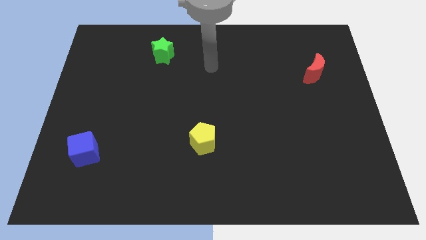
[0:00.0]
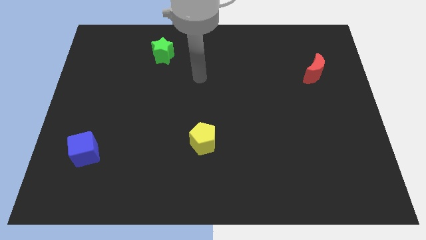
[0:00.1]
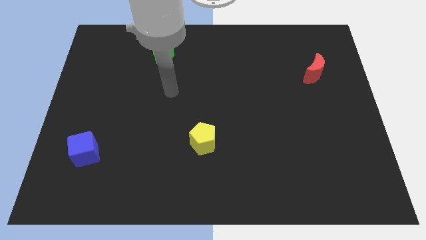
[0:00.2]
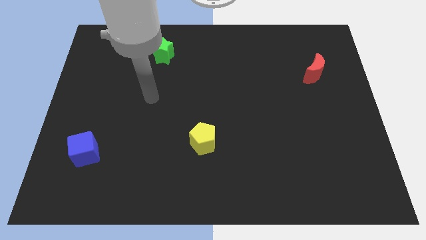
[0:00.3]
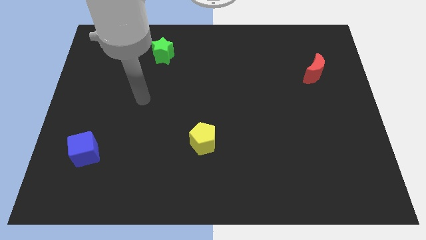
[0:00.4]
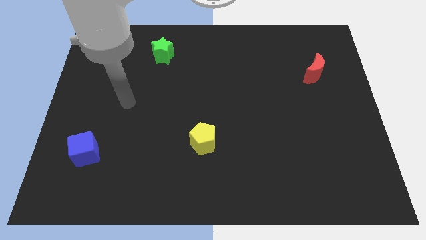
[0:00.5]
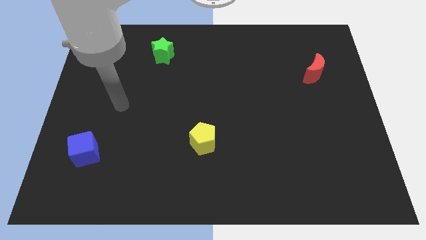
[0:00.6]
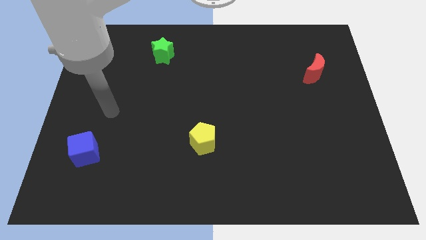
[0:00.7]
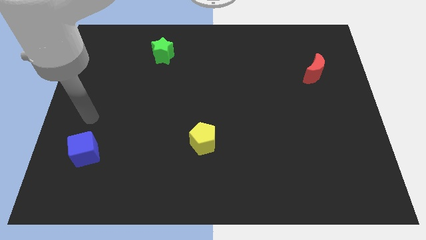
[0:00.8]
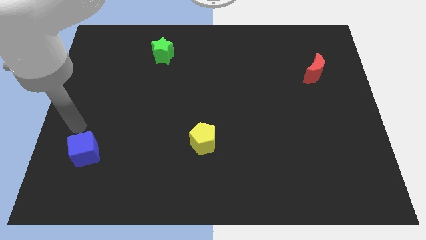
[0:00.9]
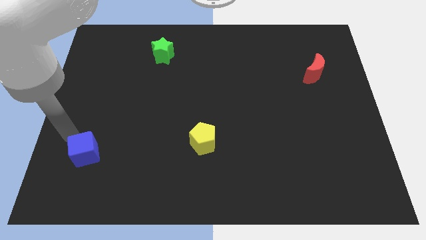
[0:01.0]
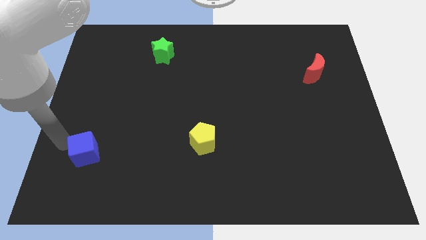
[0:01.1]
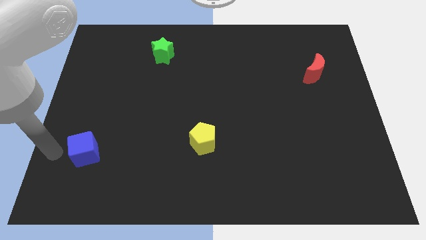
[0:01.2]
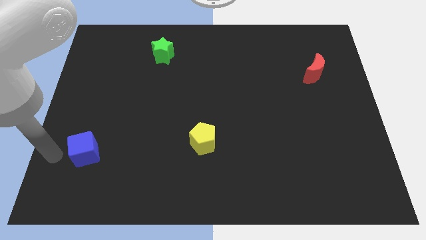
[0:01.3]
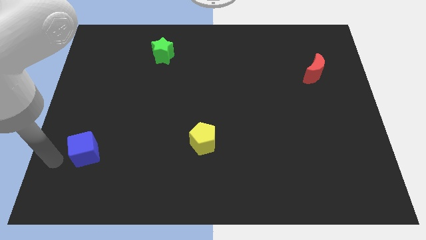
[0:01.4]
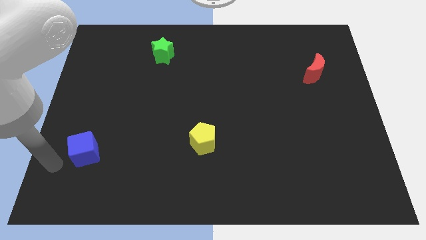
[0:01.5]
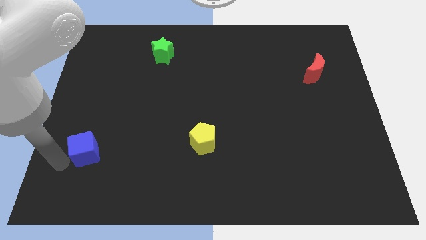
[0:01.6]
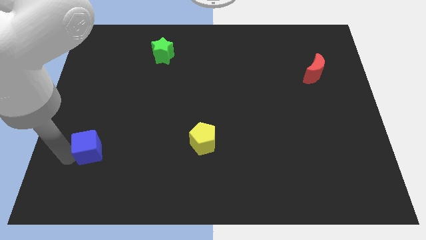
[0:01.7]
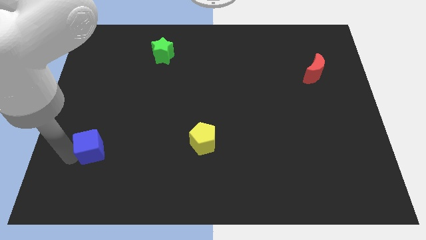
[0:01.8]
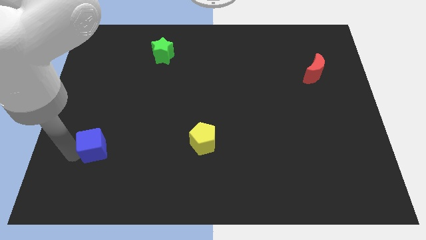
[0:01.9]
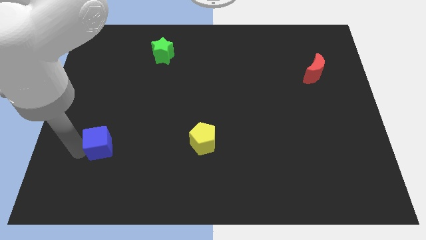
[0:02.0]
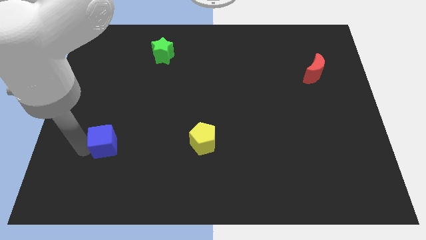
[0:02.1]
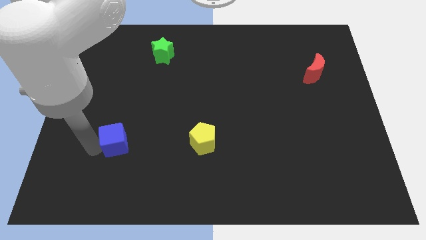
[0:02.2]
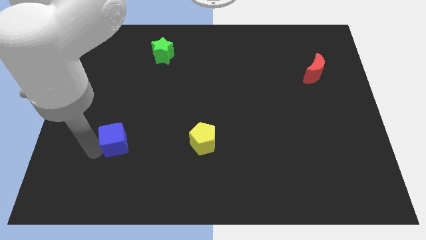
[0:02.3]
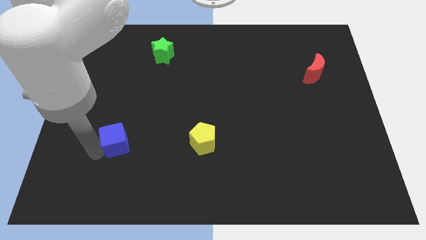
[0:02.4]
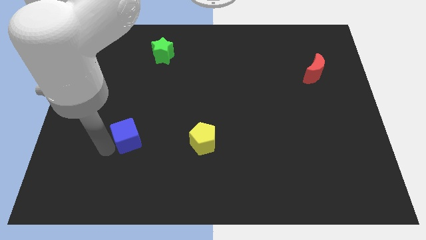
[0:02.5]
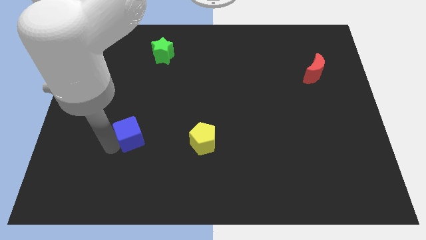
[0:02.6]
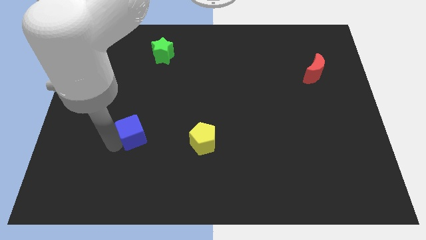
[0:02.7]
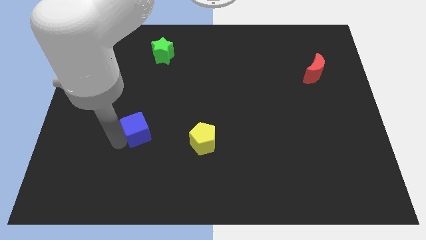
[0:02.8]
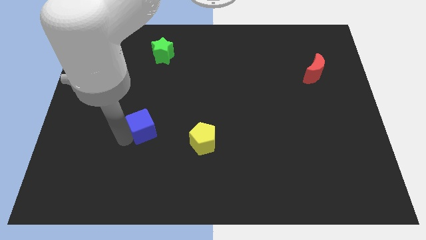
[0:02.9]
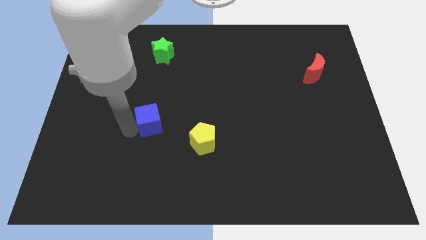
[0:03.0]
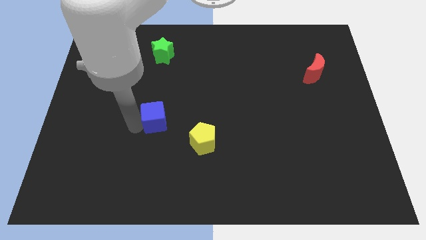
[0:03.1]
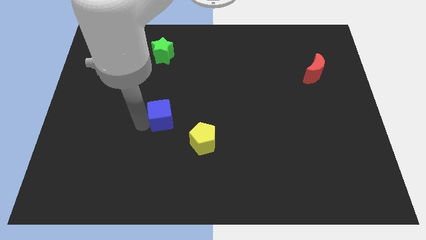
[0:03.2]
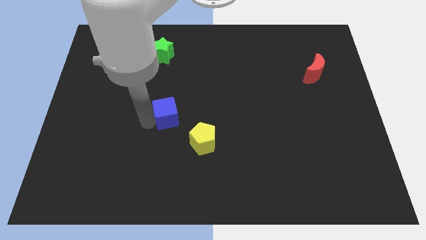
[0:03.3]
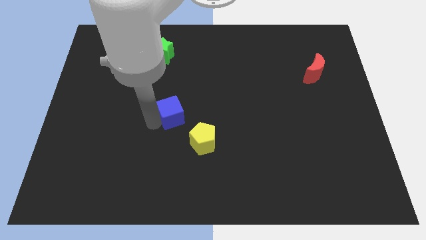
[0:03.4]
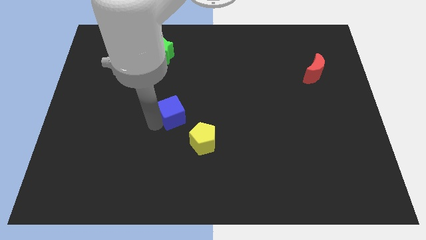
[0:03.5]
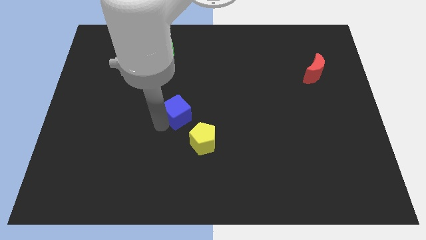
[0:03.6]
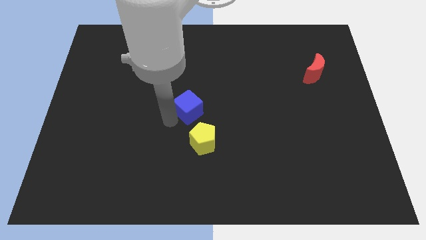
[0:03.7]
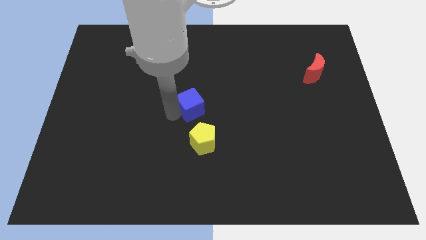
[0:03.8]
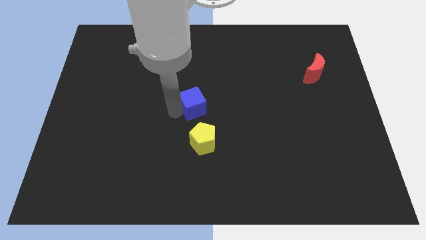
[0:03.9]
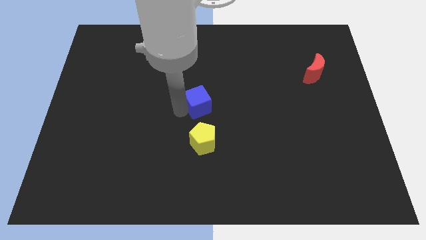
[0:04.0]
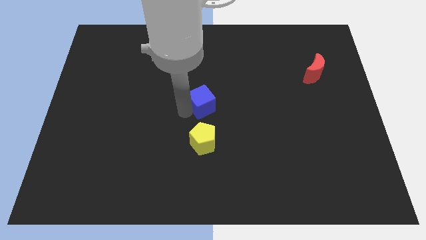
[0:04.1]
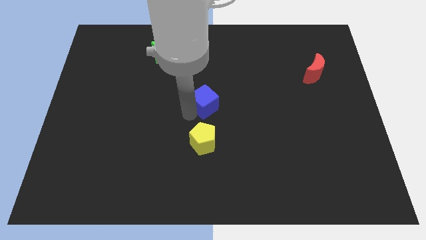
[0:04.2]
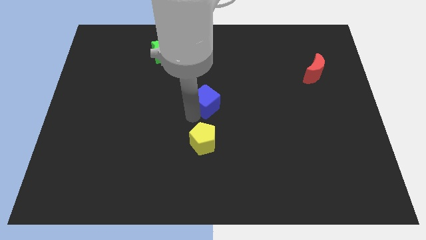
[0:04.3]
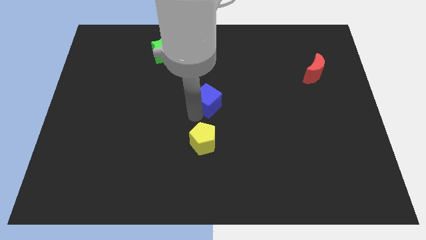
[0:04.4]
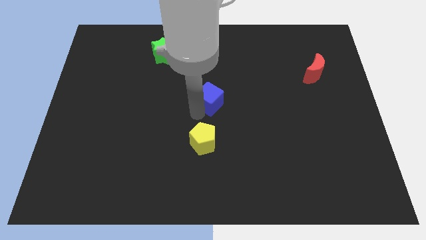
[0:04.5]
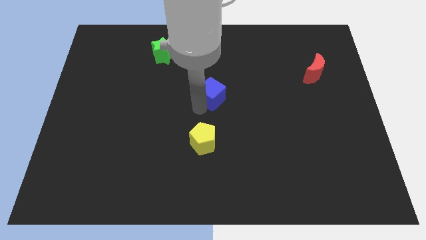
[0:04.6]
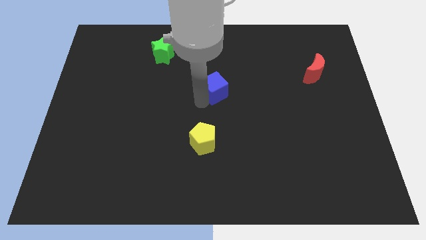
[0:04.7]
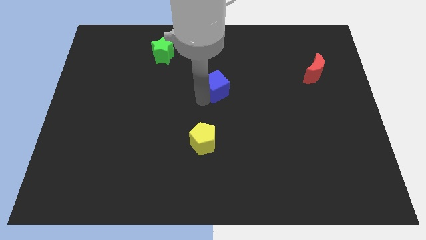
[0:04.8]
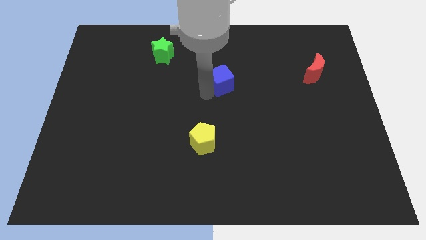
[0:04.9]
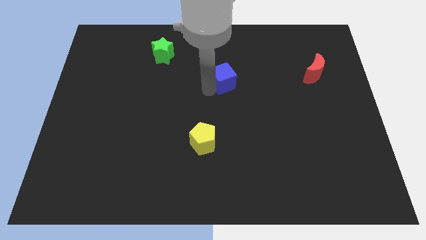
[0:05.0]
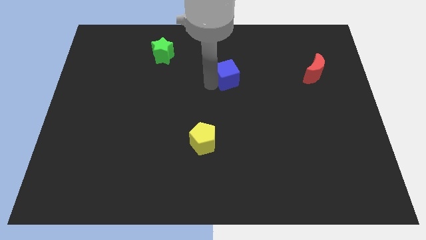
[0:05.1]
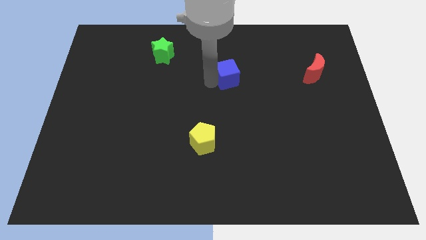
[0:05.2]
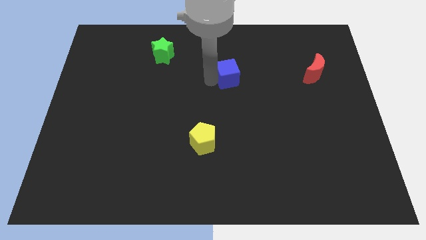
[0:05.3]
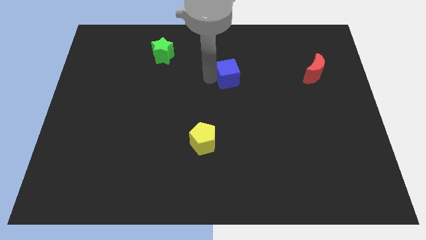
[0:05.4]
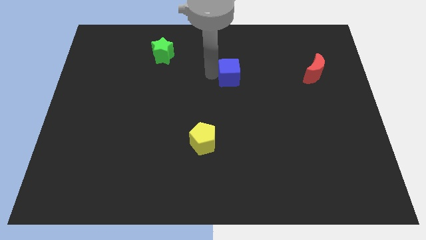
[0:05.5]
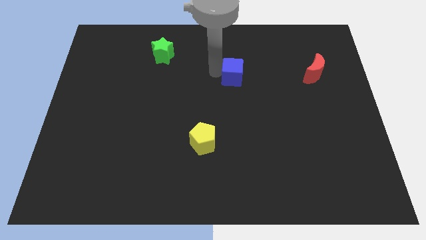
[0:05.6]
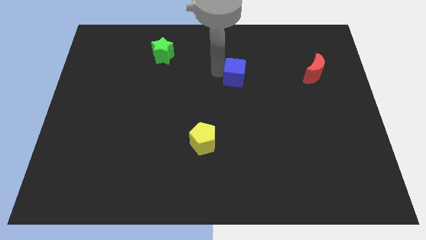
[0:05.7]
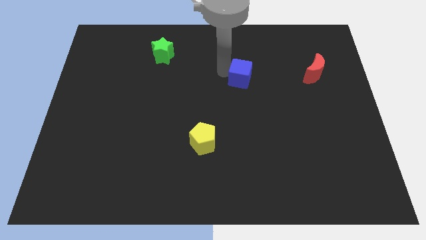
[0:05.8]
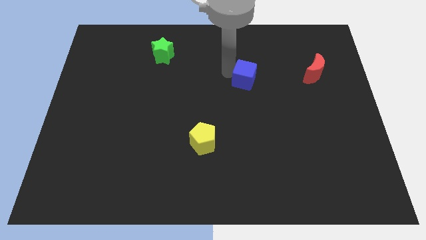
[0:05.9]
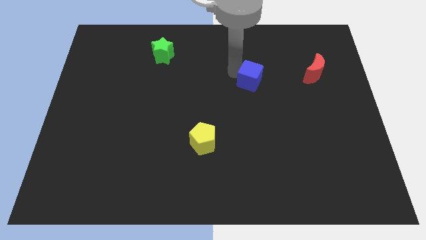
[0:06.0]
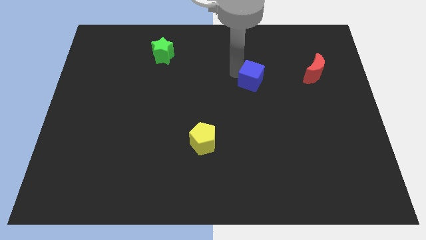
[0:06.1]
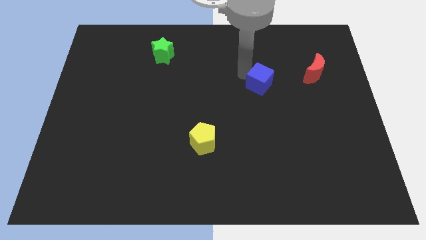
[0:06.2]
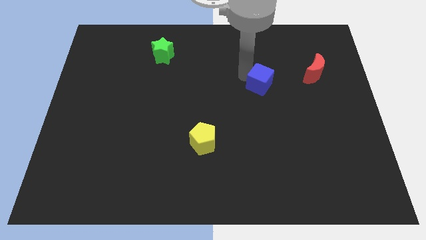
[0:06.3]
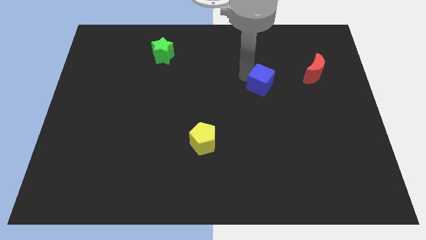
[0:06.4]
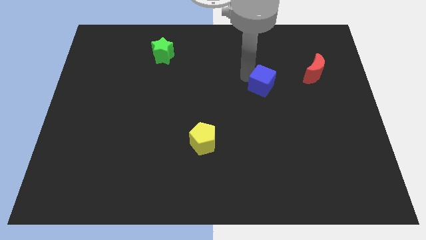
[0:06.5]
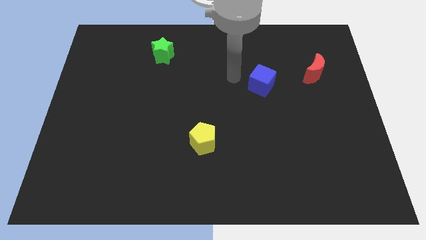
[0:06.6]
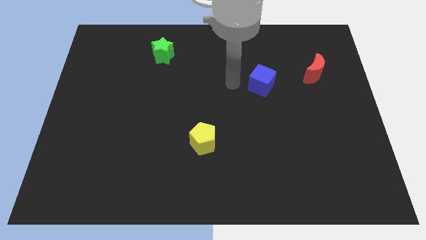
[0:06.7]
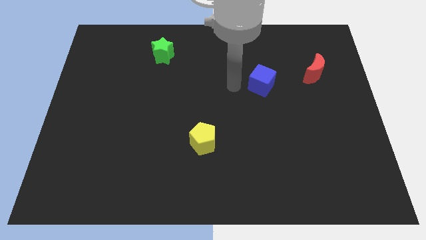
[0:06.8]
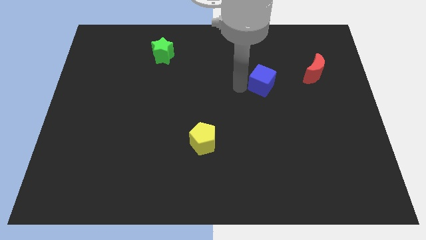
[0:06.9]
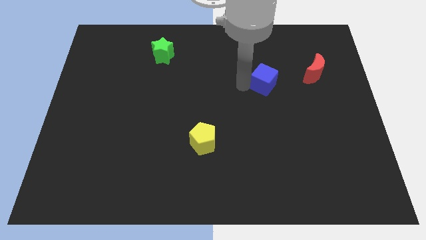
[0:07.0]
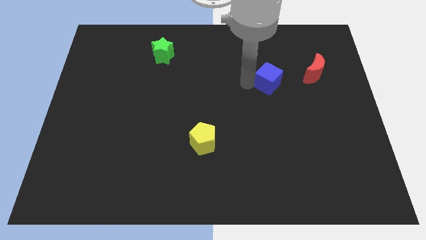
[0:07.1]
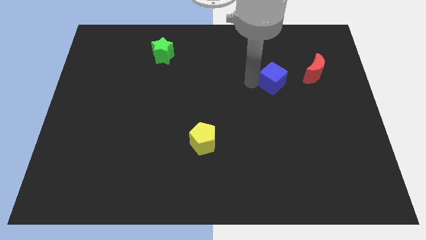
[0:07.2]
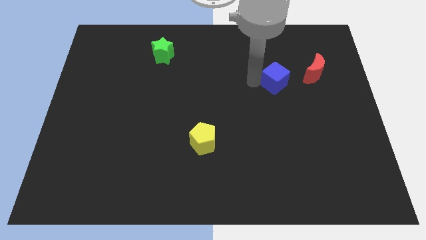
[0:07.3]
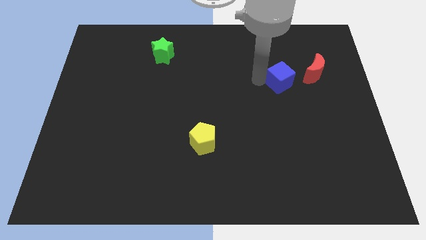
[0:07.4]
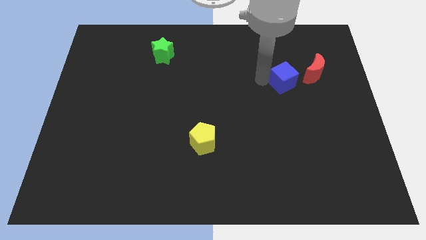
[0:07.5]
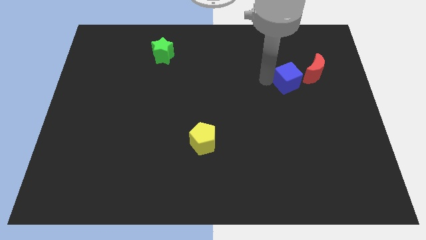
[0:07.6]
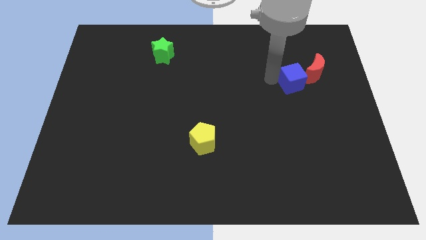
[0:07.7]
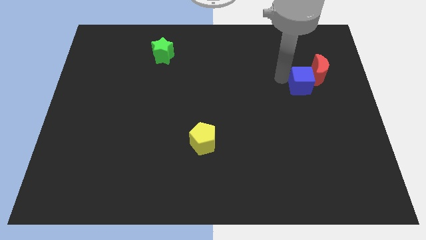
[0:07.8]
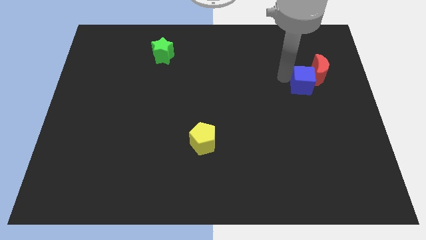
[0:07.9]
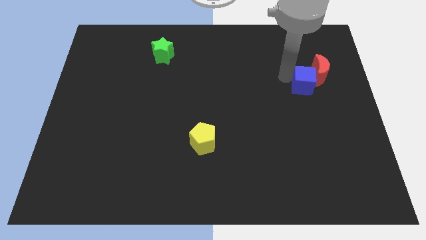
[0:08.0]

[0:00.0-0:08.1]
move the blue block close to the red block

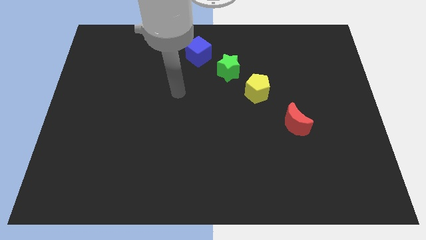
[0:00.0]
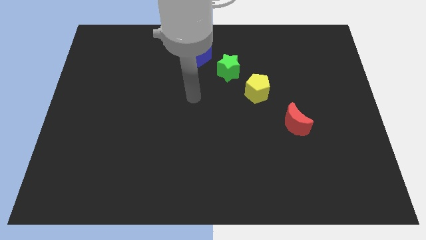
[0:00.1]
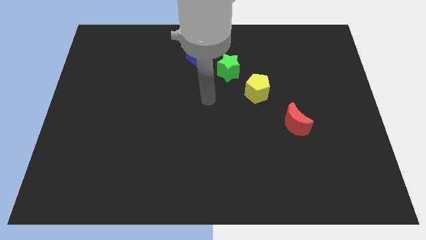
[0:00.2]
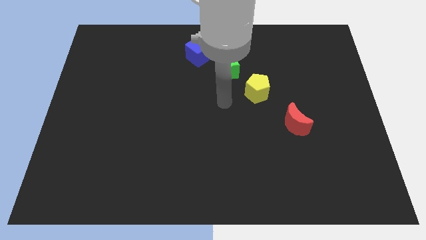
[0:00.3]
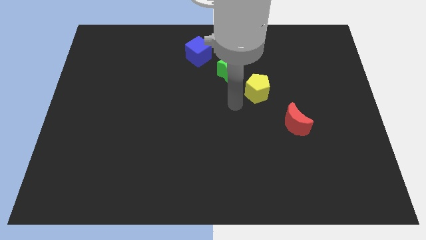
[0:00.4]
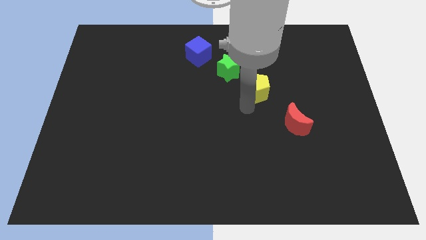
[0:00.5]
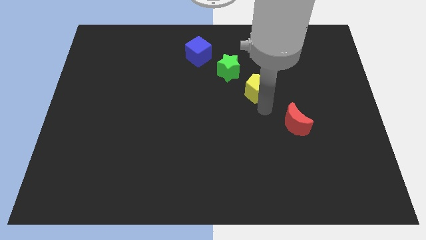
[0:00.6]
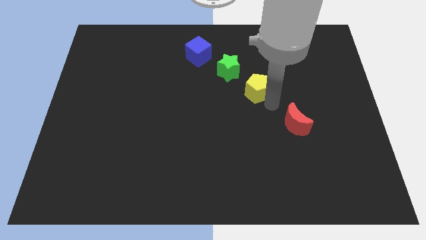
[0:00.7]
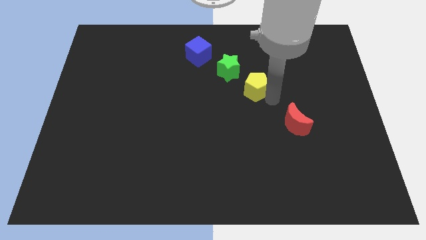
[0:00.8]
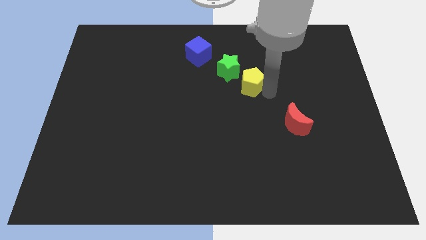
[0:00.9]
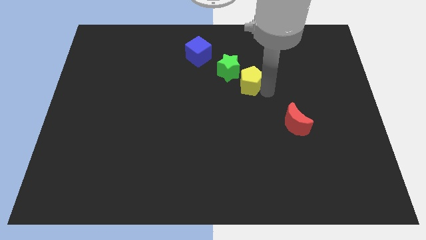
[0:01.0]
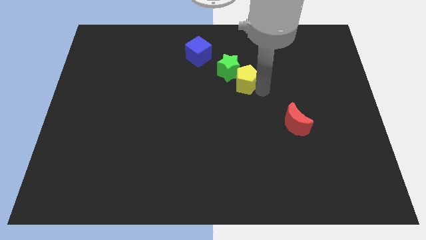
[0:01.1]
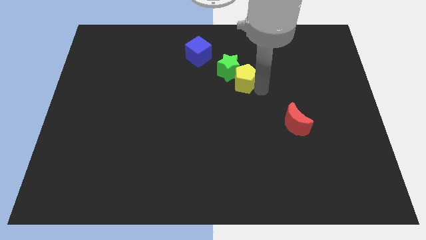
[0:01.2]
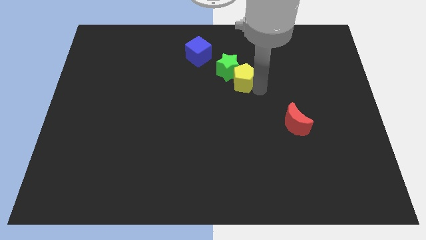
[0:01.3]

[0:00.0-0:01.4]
put the yellow pentagon towards the star
